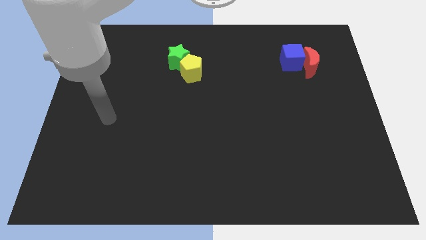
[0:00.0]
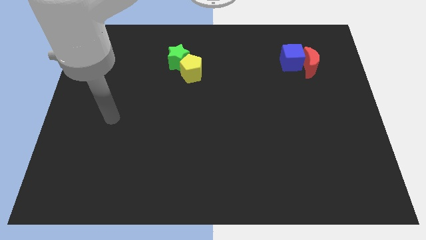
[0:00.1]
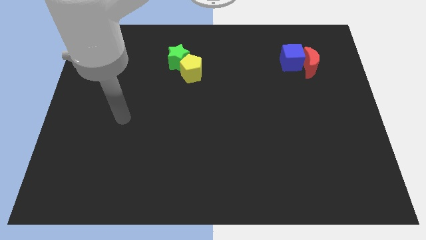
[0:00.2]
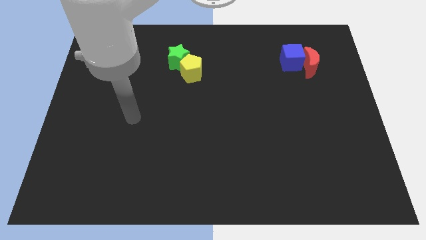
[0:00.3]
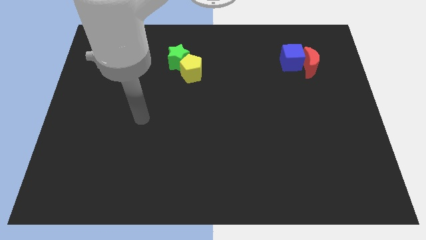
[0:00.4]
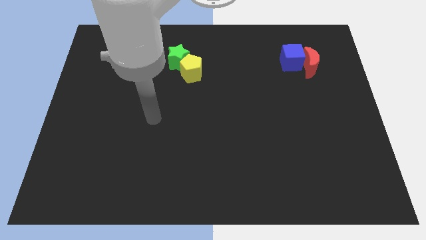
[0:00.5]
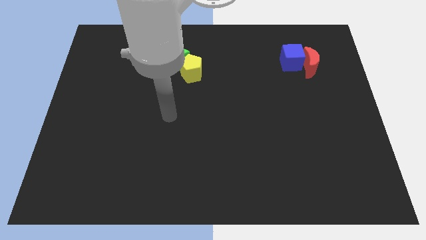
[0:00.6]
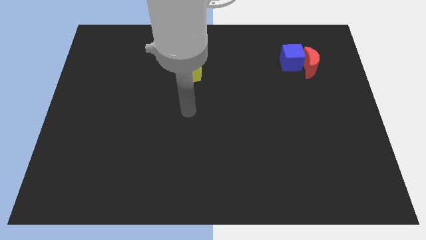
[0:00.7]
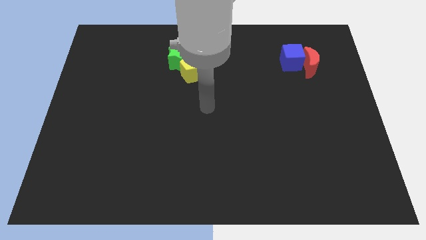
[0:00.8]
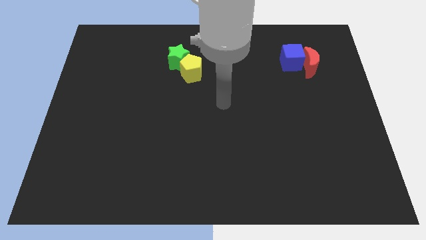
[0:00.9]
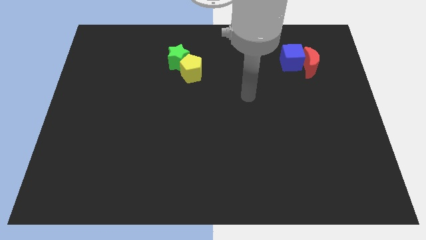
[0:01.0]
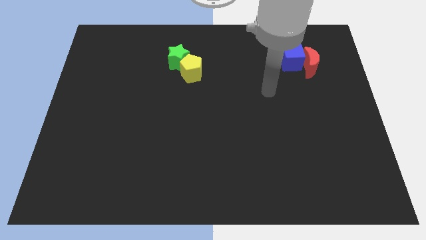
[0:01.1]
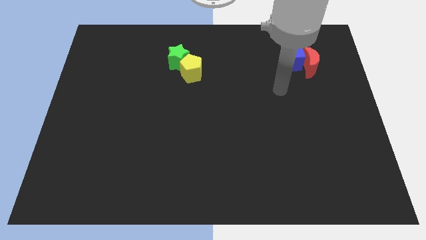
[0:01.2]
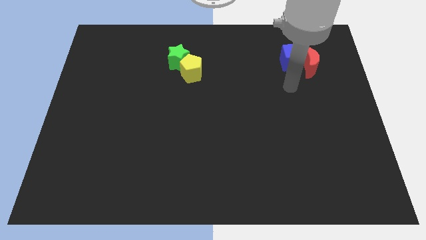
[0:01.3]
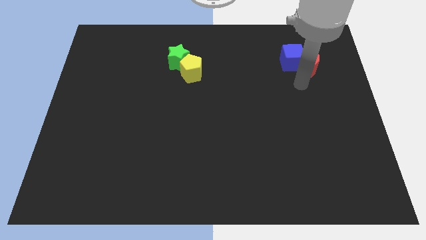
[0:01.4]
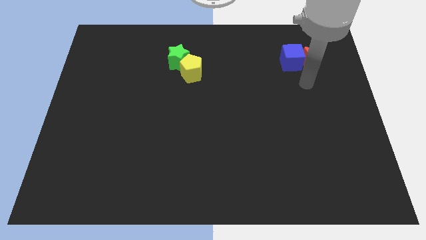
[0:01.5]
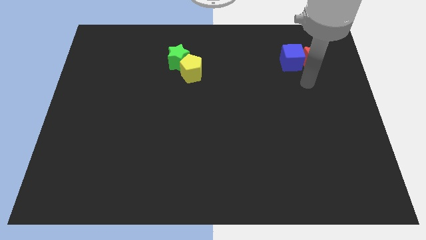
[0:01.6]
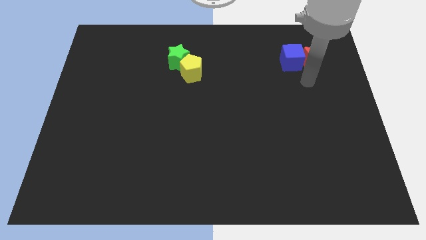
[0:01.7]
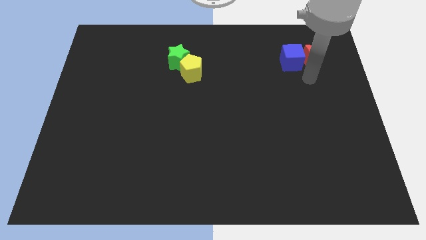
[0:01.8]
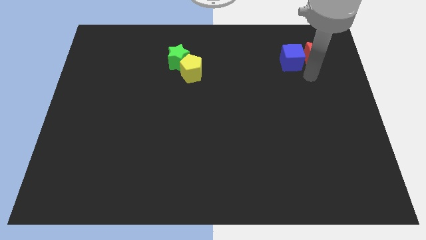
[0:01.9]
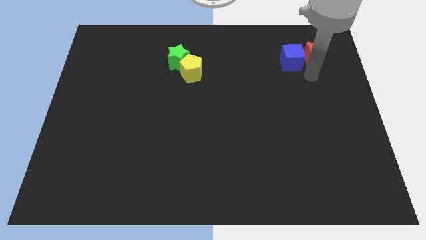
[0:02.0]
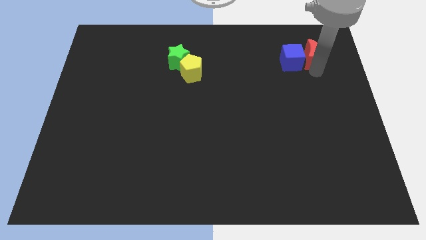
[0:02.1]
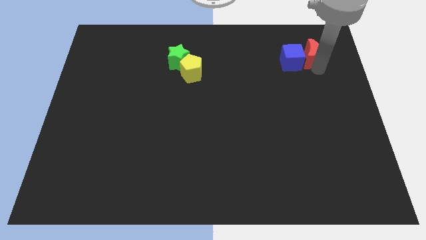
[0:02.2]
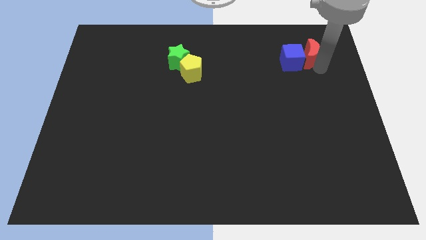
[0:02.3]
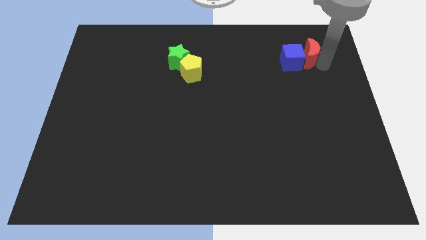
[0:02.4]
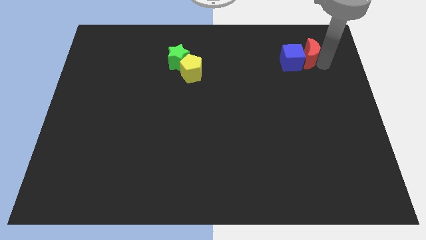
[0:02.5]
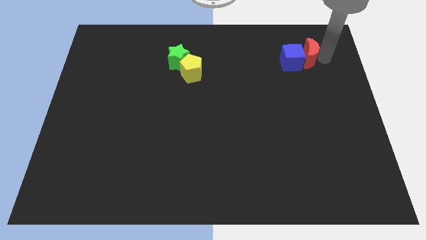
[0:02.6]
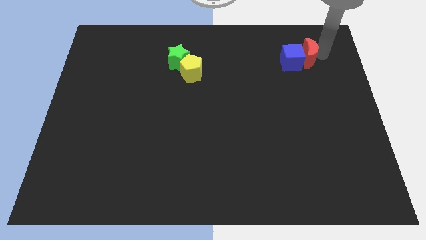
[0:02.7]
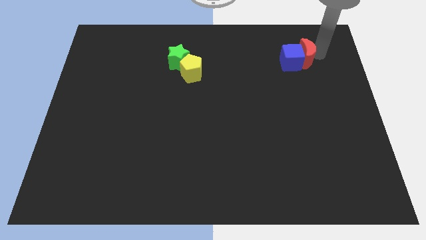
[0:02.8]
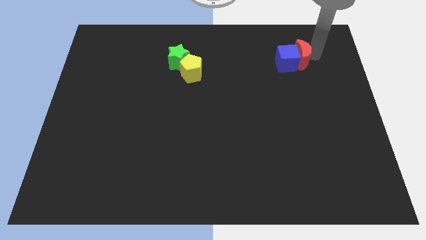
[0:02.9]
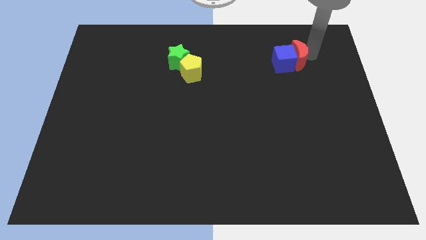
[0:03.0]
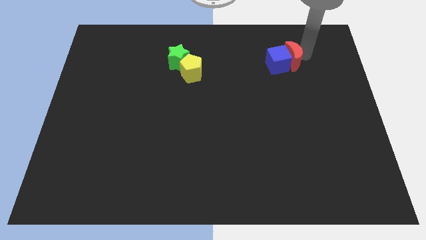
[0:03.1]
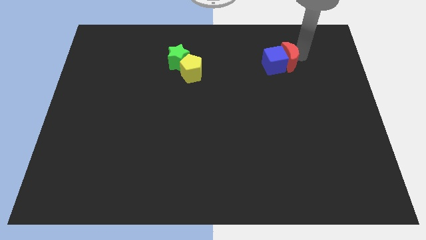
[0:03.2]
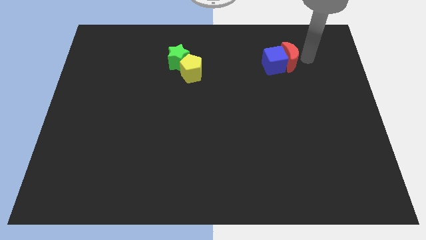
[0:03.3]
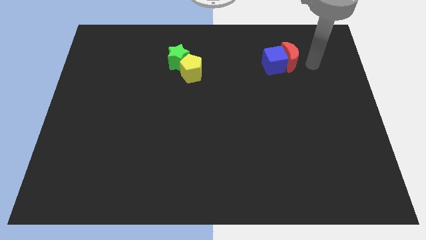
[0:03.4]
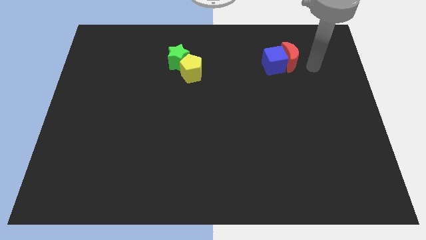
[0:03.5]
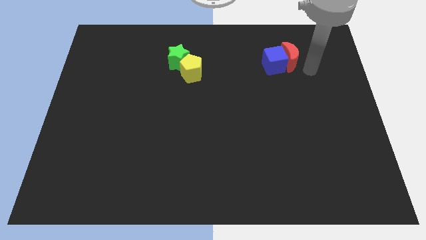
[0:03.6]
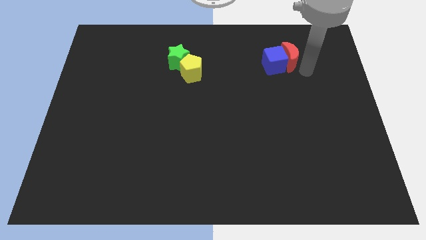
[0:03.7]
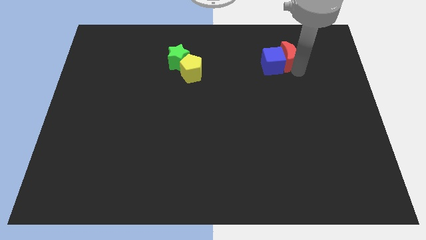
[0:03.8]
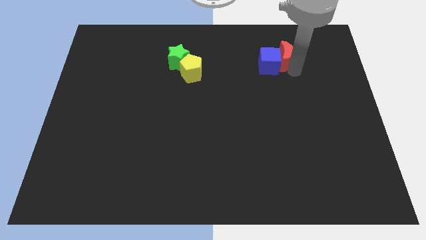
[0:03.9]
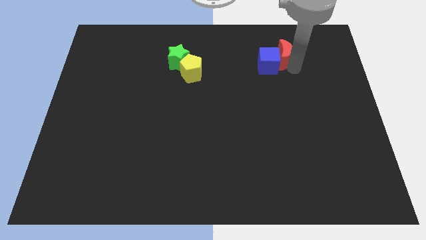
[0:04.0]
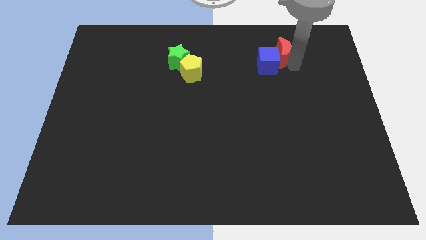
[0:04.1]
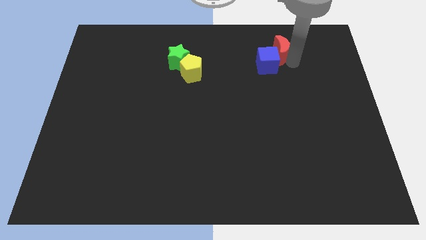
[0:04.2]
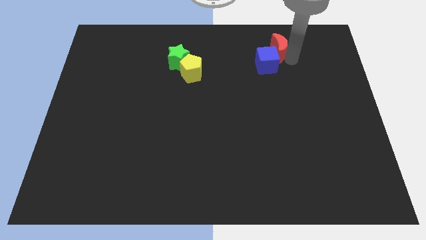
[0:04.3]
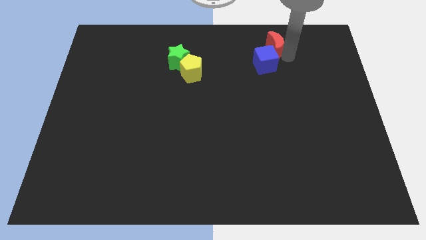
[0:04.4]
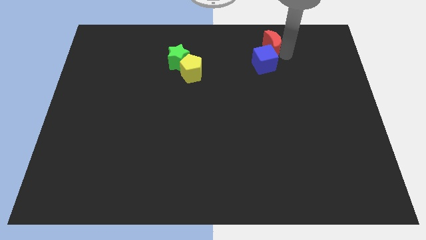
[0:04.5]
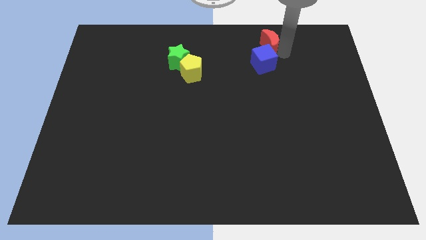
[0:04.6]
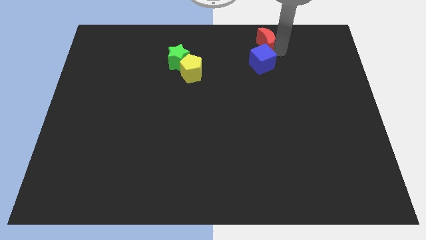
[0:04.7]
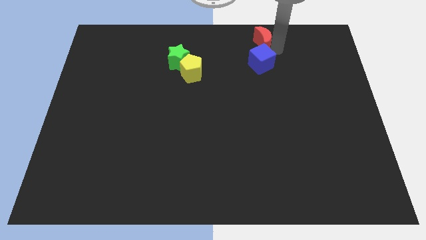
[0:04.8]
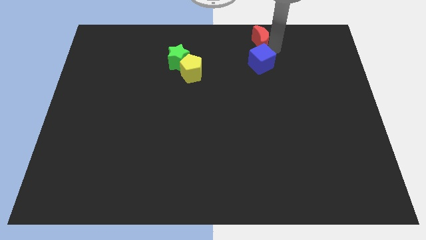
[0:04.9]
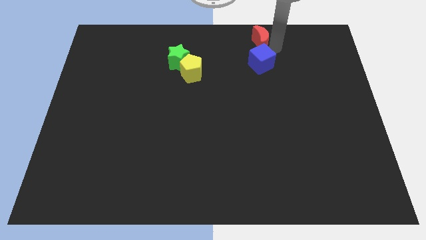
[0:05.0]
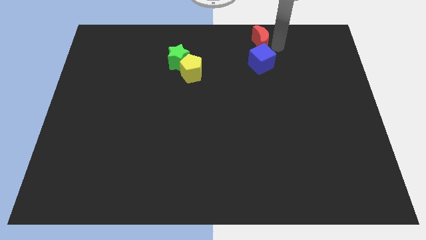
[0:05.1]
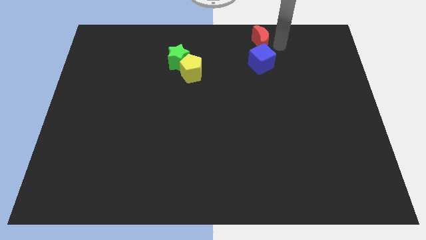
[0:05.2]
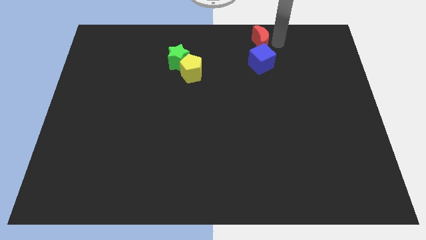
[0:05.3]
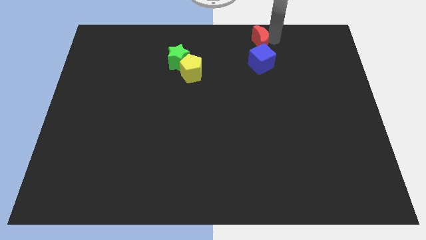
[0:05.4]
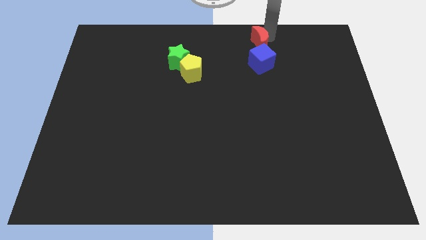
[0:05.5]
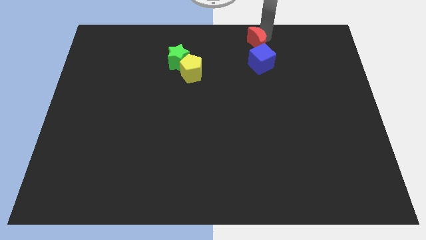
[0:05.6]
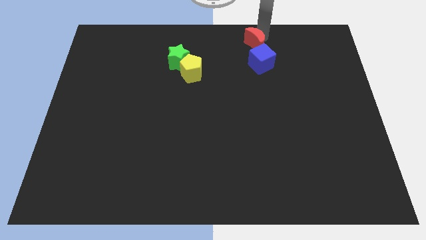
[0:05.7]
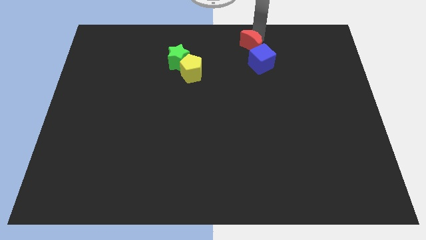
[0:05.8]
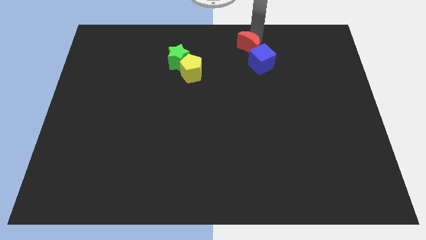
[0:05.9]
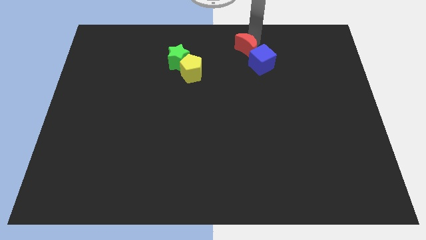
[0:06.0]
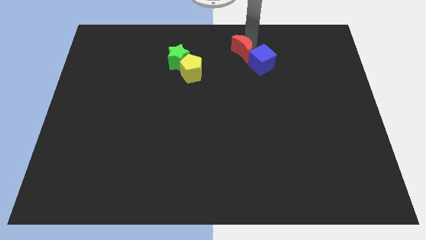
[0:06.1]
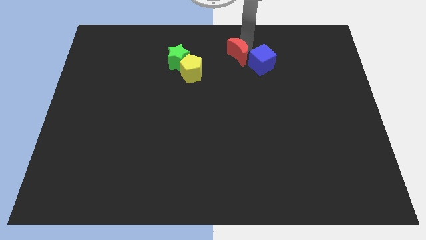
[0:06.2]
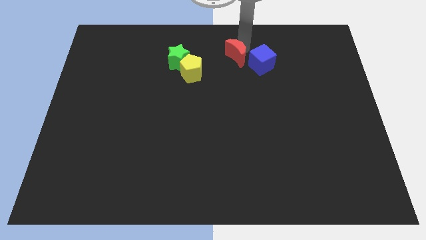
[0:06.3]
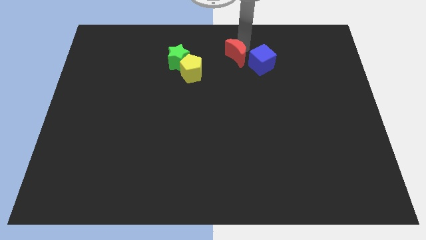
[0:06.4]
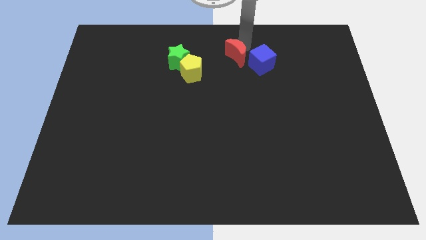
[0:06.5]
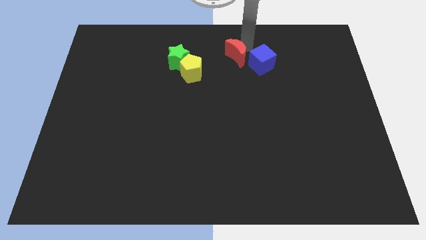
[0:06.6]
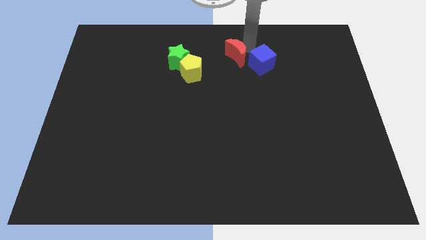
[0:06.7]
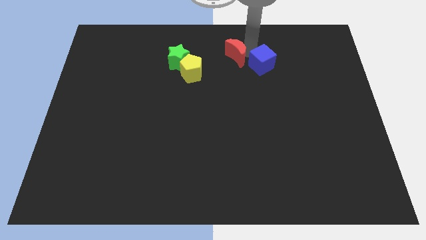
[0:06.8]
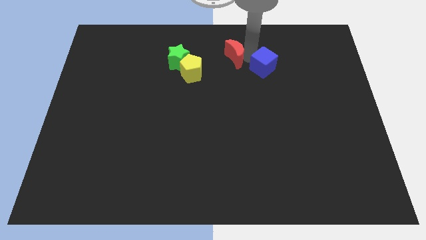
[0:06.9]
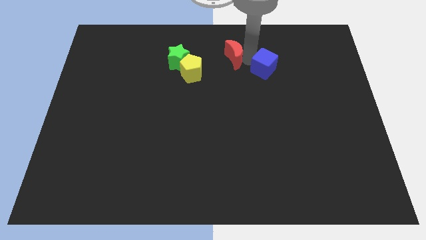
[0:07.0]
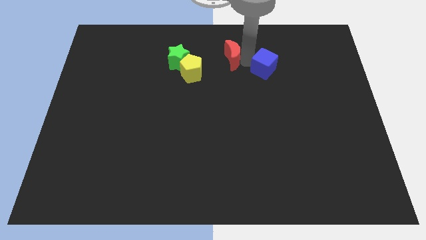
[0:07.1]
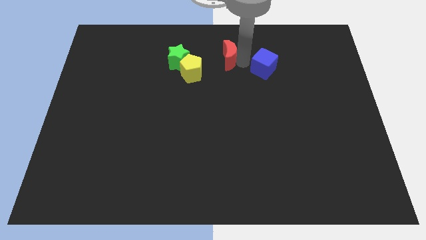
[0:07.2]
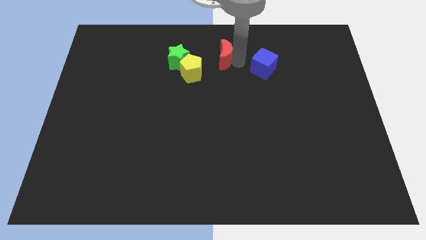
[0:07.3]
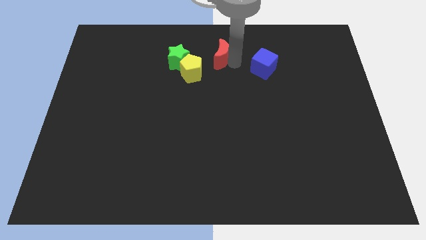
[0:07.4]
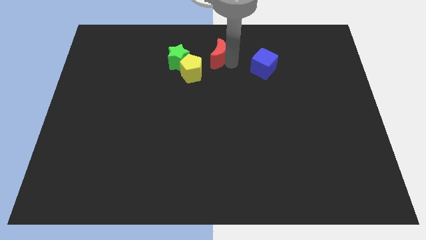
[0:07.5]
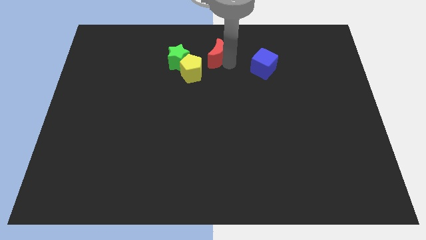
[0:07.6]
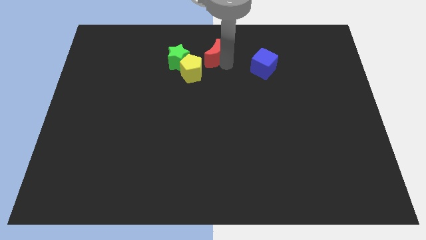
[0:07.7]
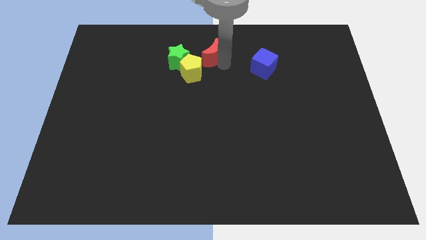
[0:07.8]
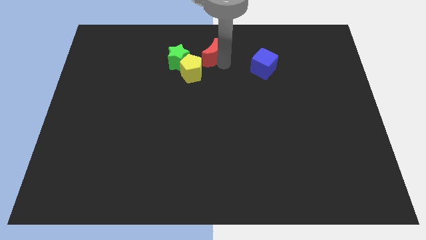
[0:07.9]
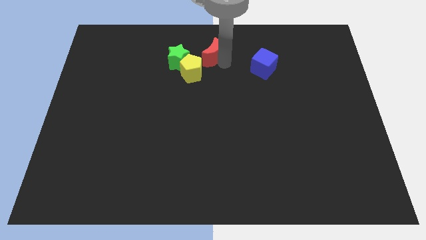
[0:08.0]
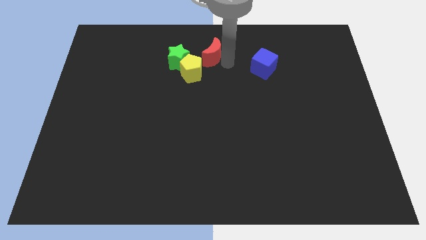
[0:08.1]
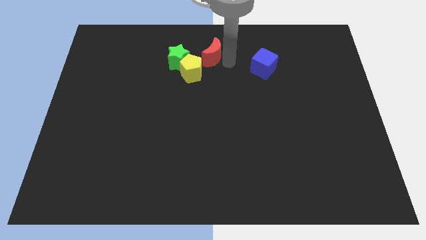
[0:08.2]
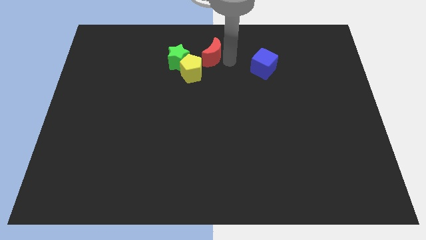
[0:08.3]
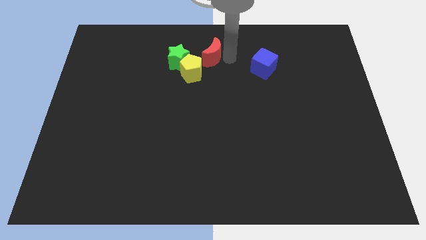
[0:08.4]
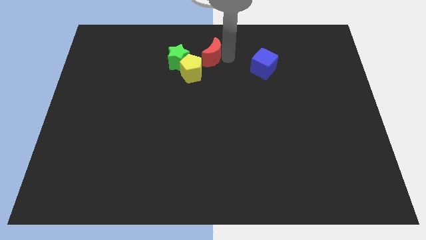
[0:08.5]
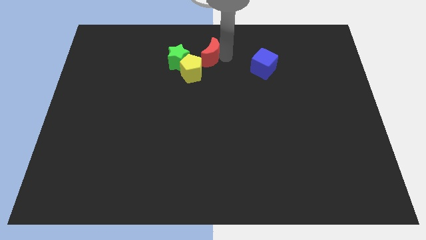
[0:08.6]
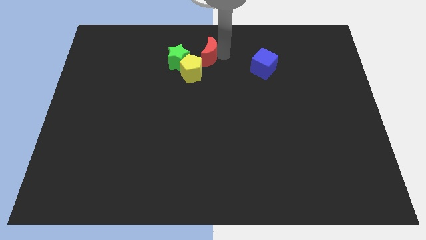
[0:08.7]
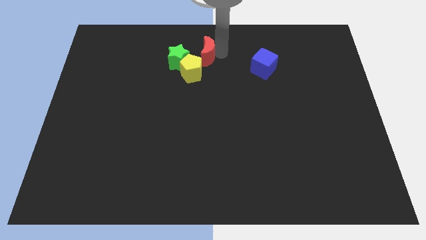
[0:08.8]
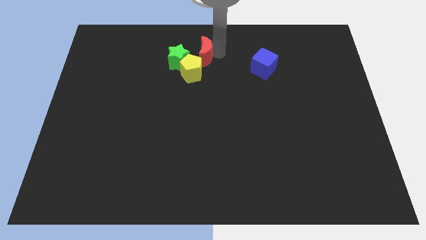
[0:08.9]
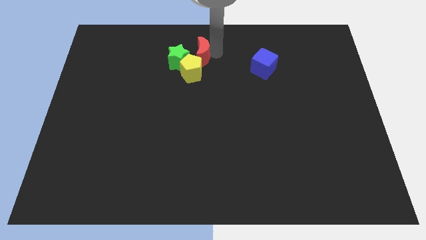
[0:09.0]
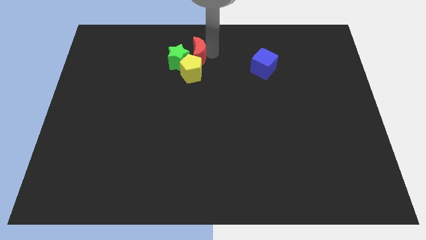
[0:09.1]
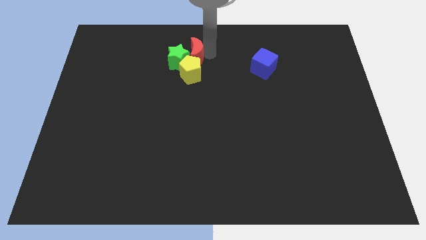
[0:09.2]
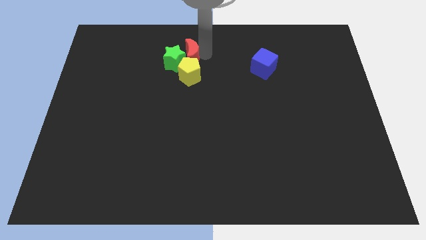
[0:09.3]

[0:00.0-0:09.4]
slide the red block close to the green block
